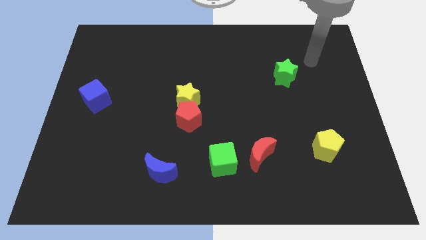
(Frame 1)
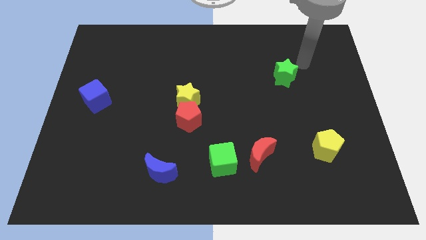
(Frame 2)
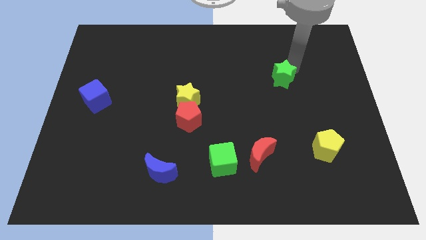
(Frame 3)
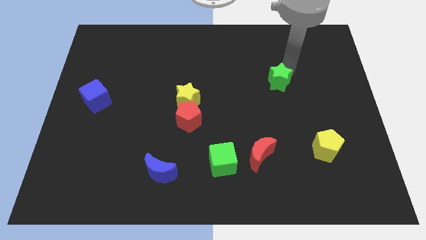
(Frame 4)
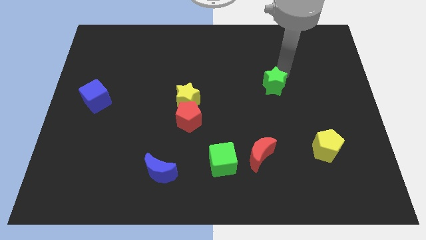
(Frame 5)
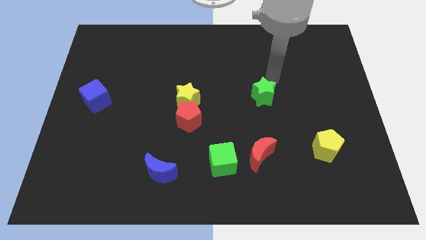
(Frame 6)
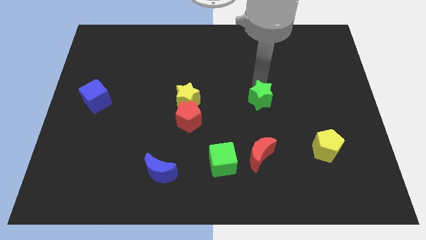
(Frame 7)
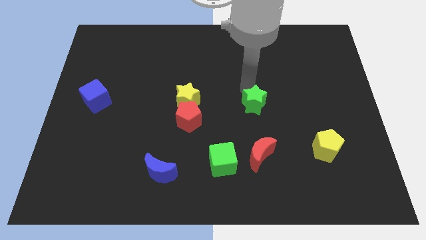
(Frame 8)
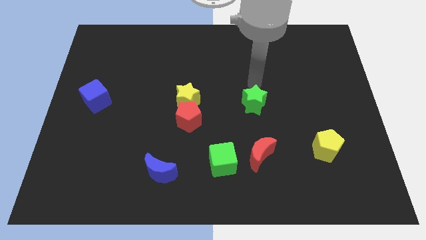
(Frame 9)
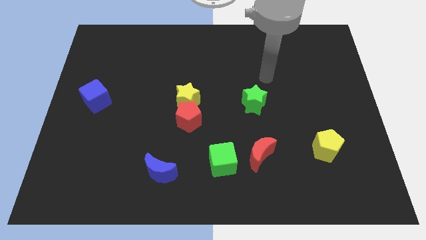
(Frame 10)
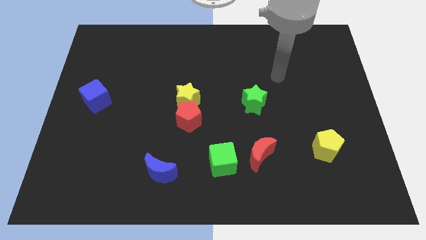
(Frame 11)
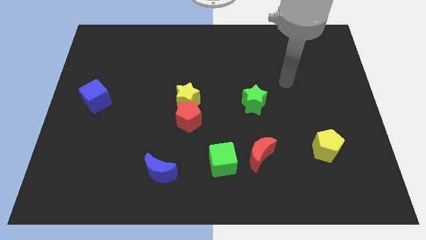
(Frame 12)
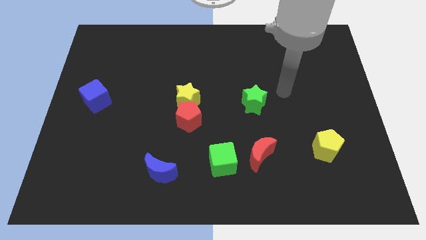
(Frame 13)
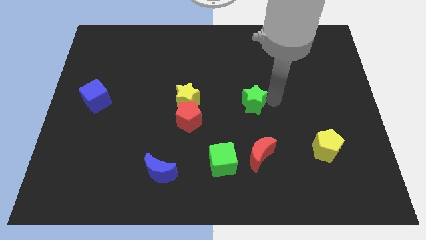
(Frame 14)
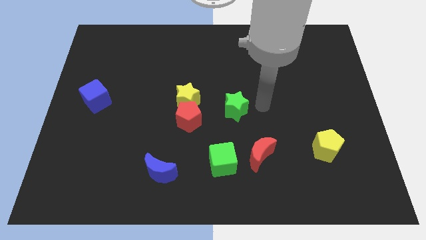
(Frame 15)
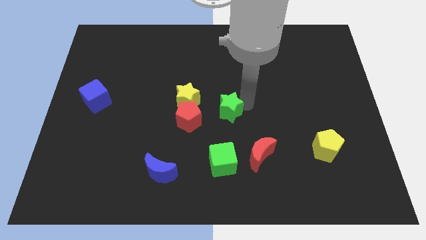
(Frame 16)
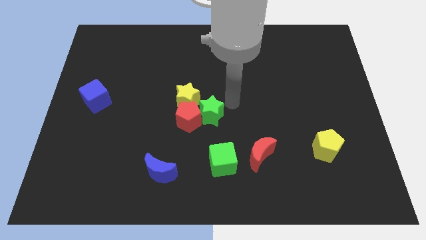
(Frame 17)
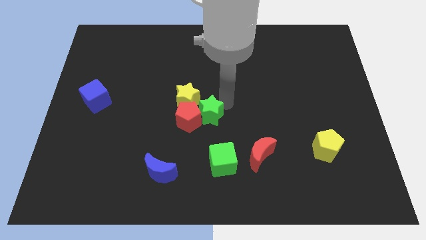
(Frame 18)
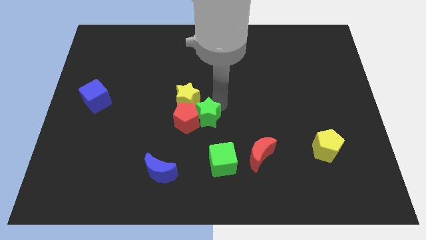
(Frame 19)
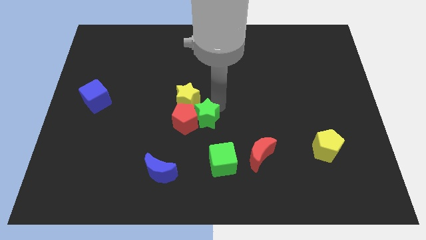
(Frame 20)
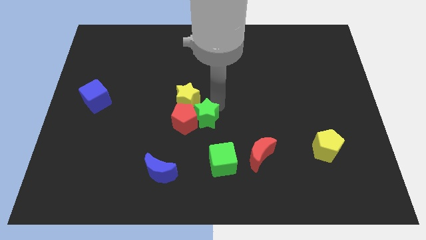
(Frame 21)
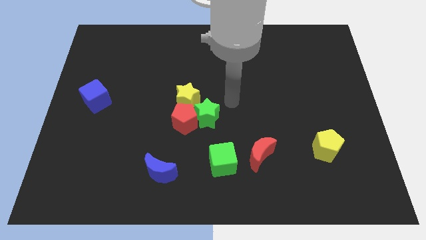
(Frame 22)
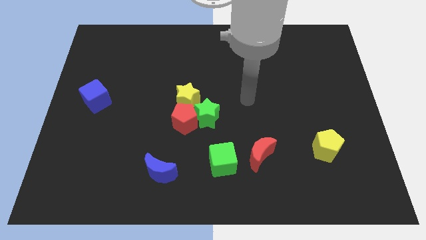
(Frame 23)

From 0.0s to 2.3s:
move the green star towards the right side of the red pentagon

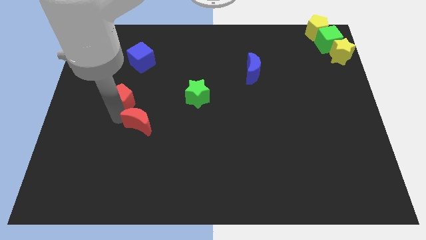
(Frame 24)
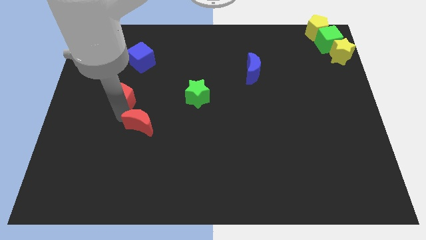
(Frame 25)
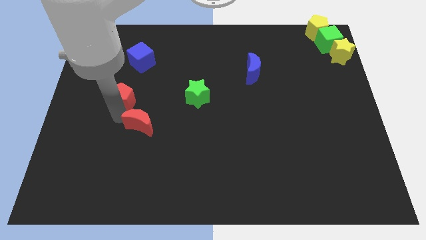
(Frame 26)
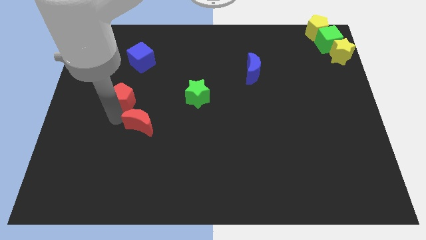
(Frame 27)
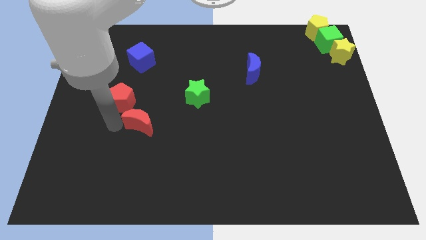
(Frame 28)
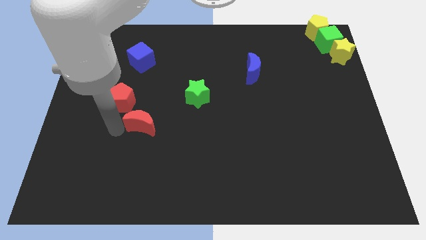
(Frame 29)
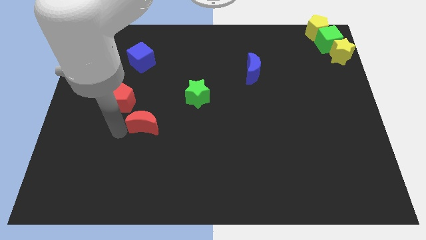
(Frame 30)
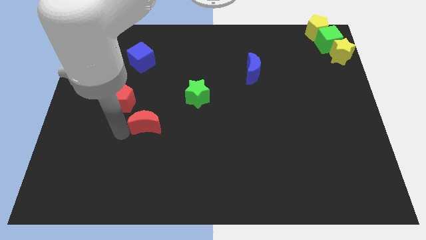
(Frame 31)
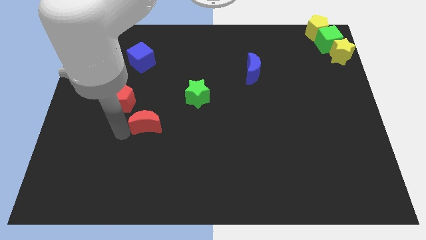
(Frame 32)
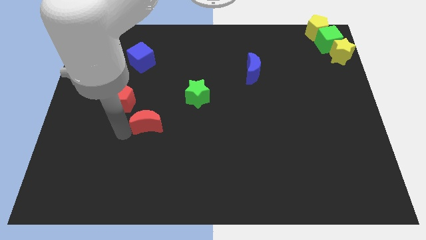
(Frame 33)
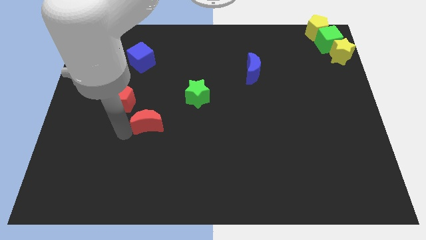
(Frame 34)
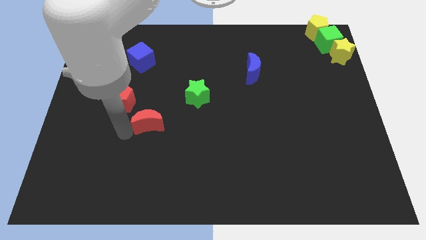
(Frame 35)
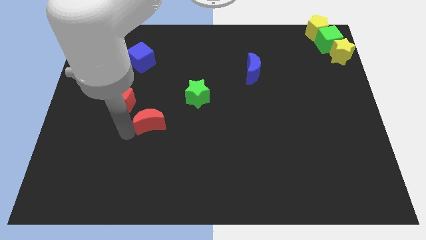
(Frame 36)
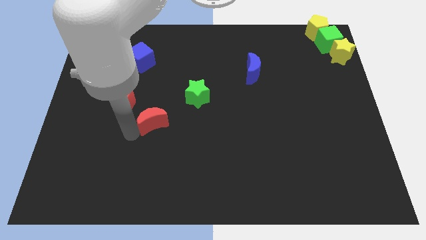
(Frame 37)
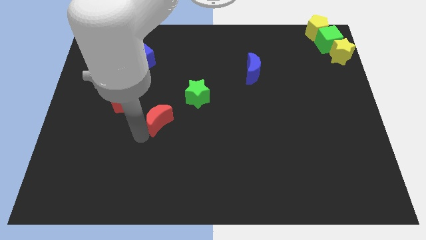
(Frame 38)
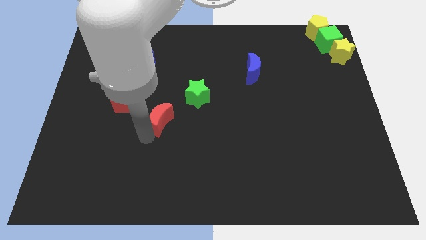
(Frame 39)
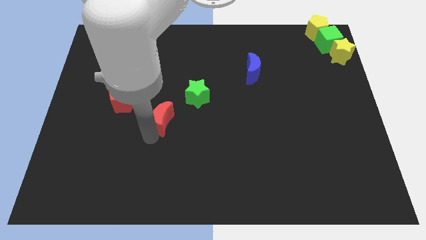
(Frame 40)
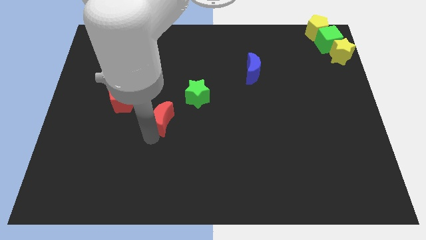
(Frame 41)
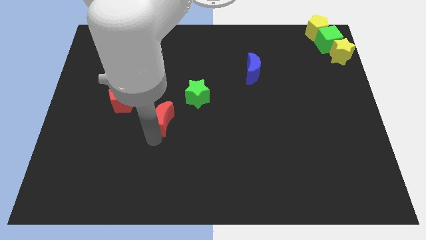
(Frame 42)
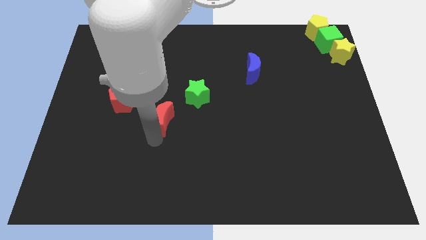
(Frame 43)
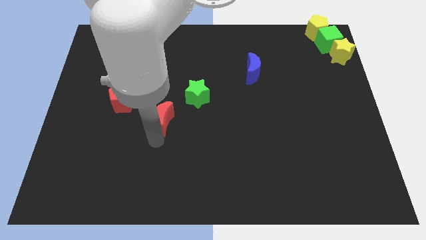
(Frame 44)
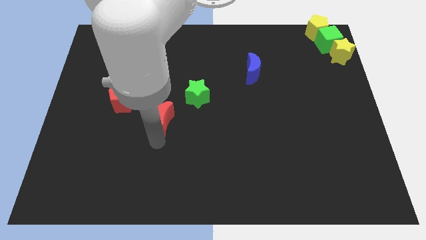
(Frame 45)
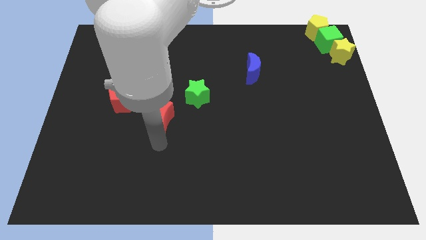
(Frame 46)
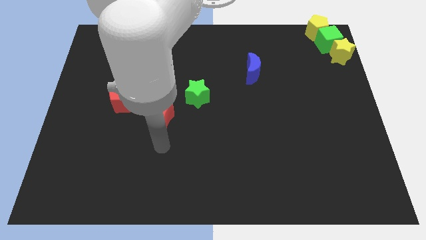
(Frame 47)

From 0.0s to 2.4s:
slightly move the red moon towards the right

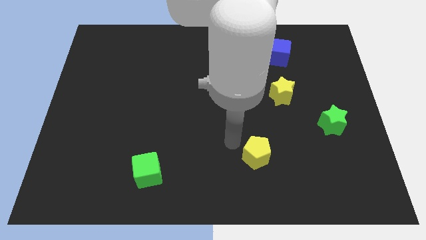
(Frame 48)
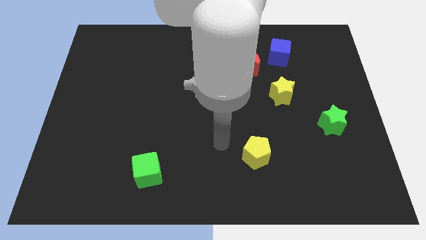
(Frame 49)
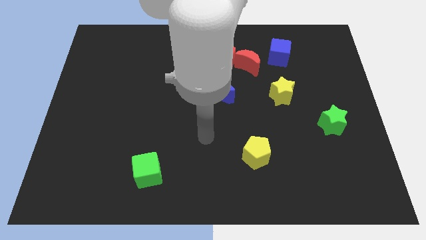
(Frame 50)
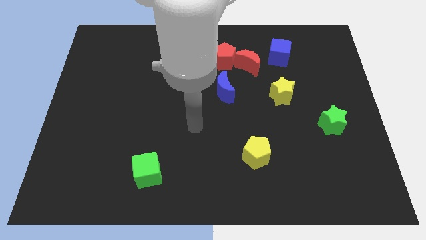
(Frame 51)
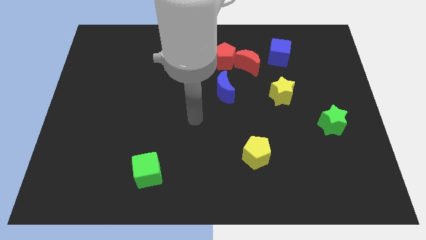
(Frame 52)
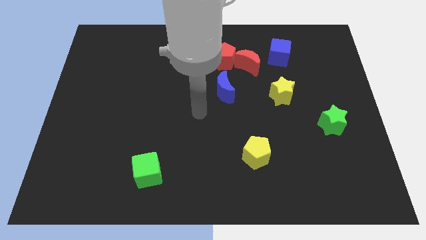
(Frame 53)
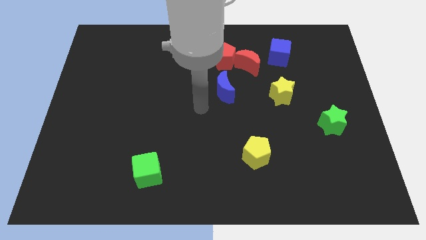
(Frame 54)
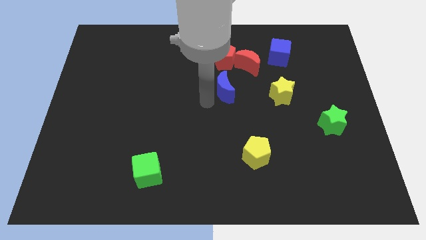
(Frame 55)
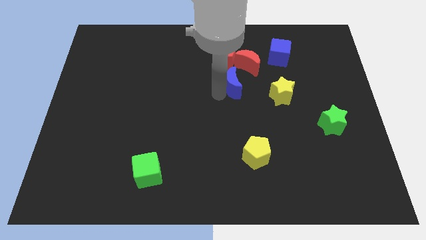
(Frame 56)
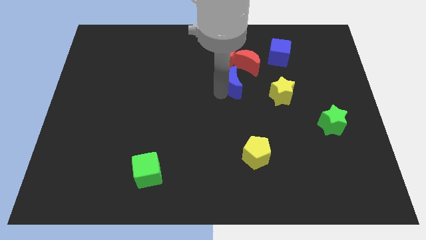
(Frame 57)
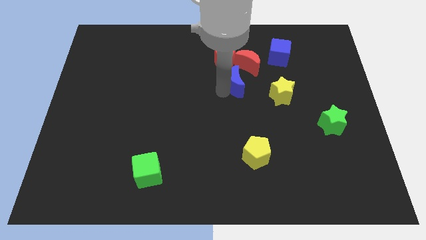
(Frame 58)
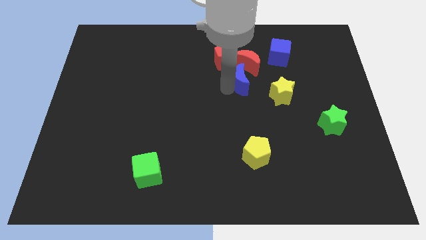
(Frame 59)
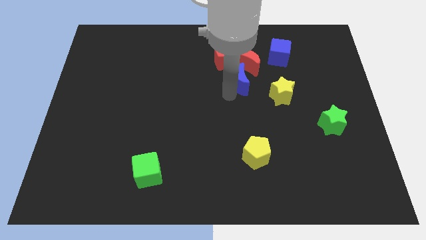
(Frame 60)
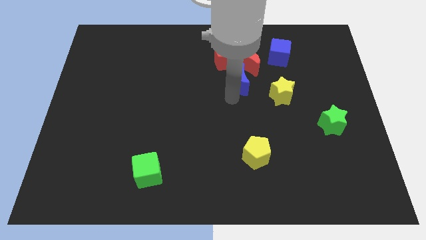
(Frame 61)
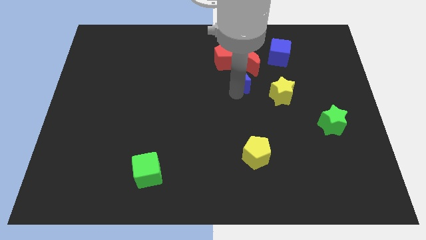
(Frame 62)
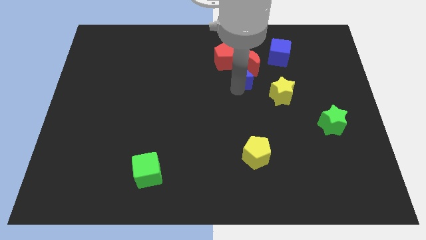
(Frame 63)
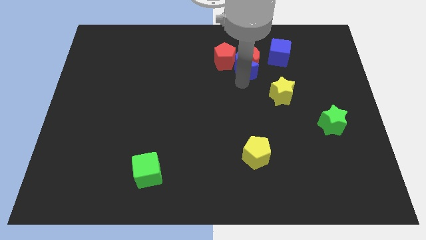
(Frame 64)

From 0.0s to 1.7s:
push the blue crescent into the red crescent from the bottom

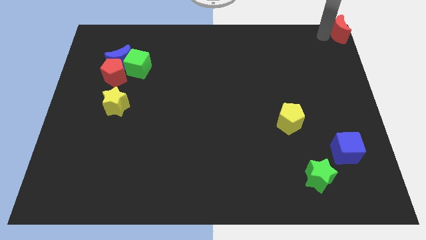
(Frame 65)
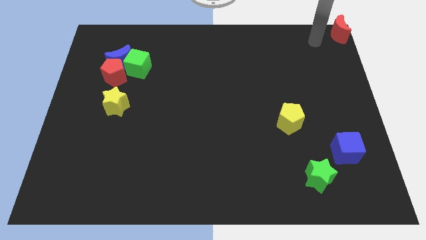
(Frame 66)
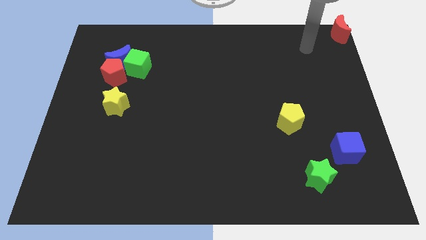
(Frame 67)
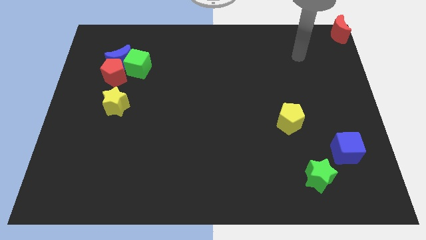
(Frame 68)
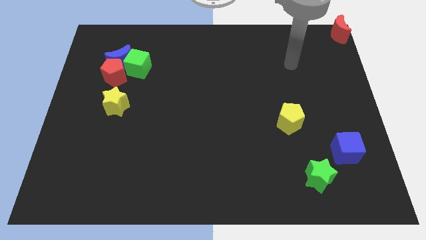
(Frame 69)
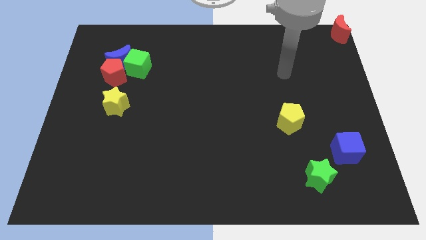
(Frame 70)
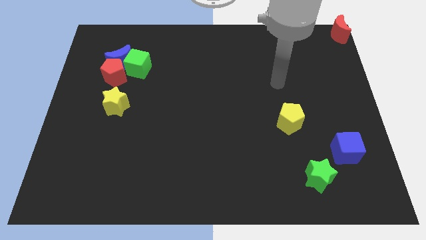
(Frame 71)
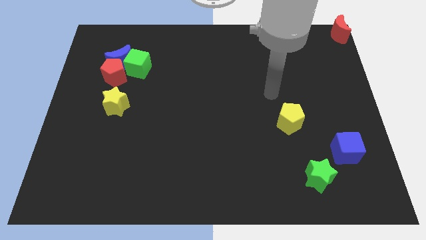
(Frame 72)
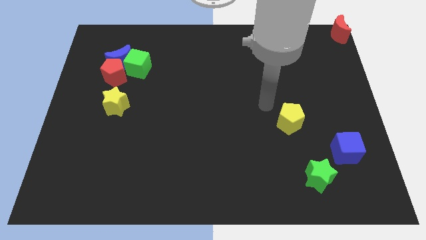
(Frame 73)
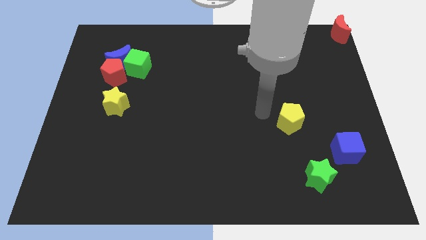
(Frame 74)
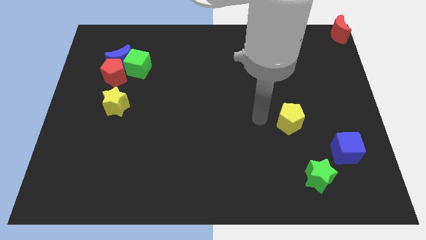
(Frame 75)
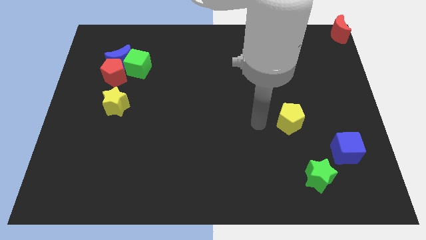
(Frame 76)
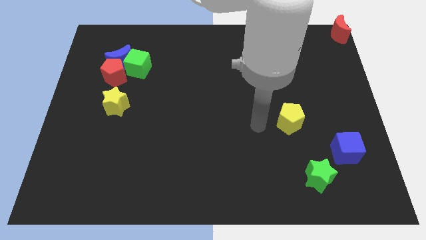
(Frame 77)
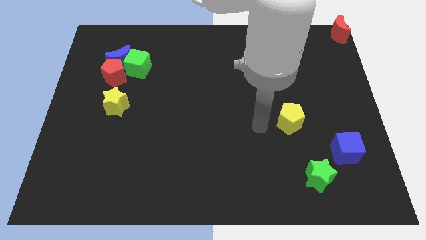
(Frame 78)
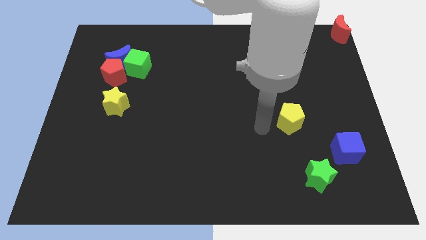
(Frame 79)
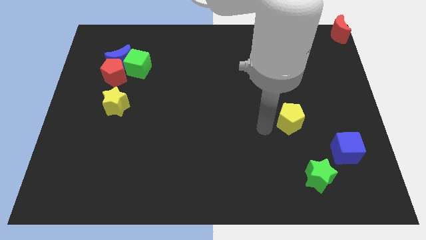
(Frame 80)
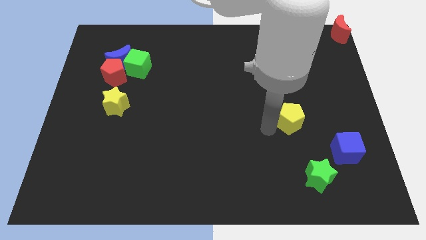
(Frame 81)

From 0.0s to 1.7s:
move your arm away from the red crecent

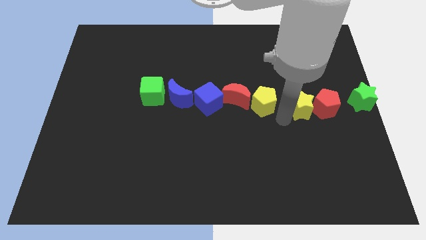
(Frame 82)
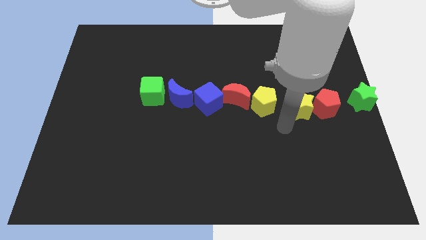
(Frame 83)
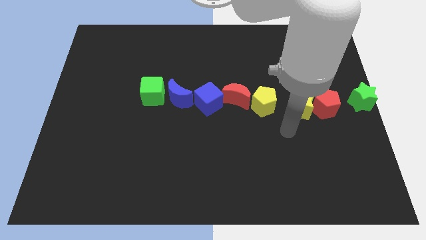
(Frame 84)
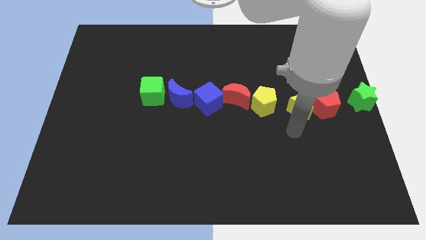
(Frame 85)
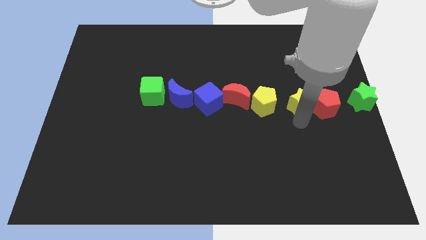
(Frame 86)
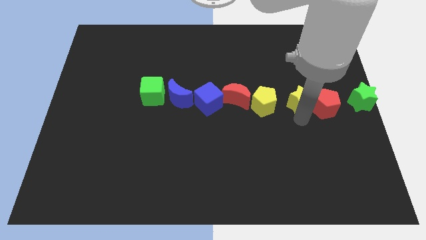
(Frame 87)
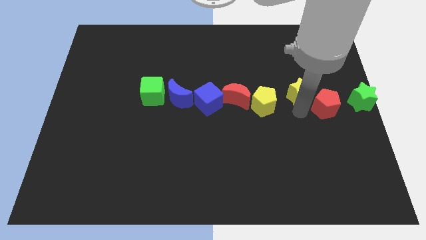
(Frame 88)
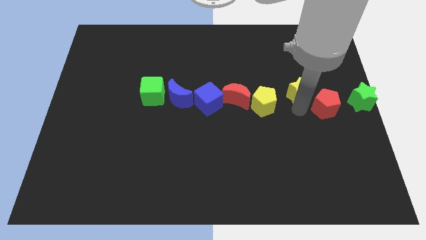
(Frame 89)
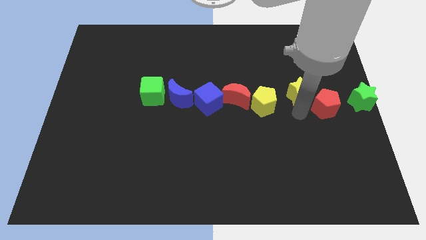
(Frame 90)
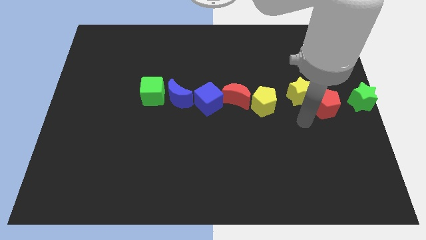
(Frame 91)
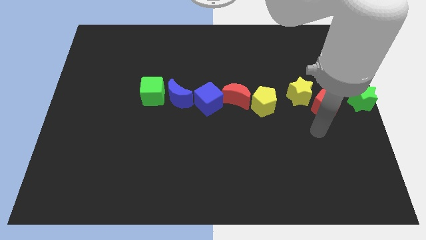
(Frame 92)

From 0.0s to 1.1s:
push the yellow star upwards

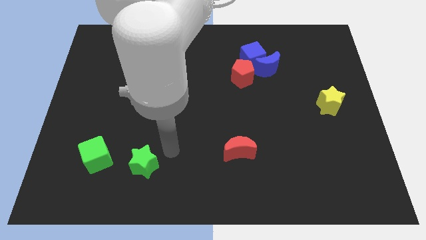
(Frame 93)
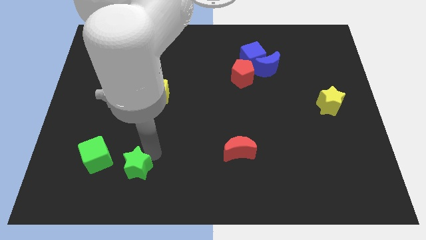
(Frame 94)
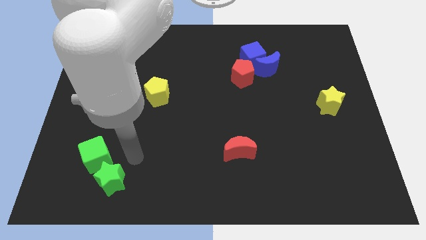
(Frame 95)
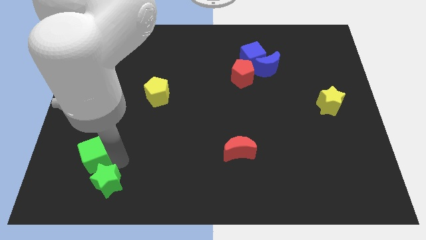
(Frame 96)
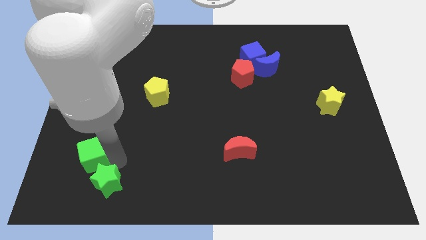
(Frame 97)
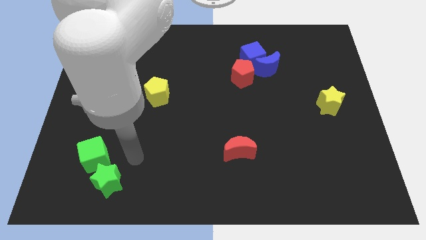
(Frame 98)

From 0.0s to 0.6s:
place the green star at the bottom of green cube